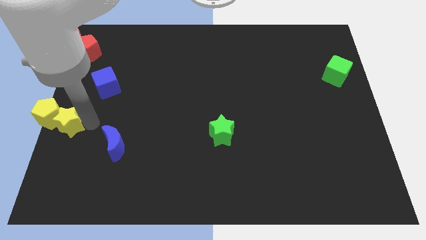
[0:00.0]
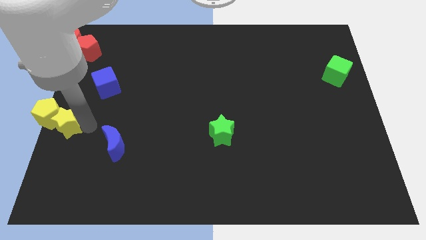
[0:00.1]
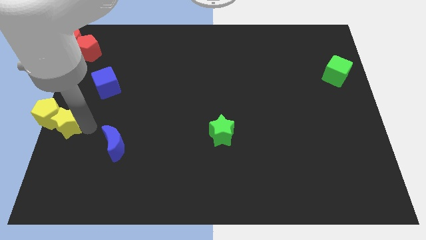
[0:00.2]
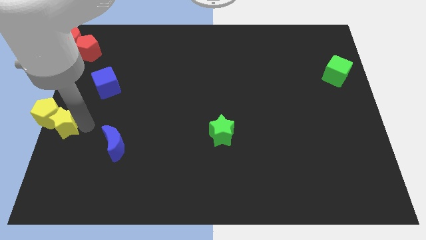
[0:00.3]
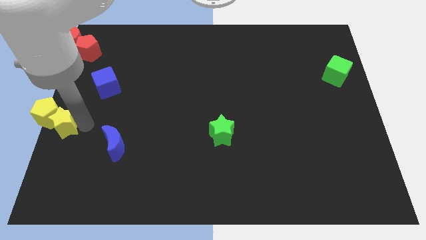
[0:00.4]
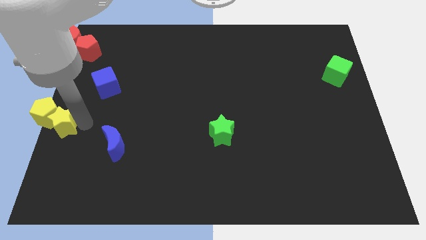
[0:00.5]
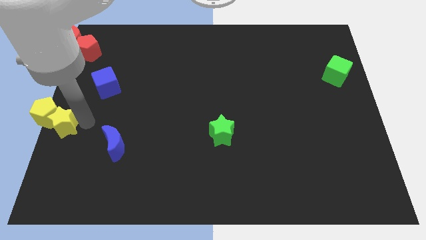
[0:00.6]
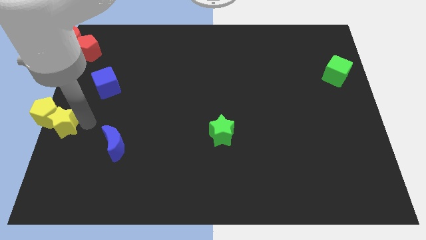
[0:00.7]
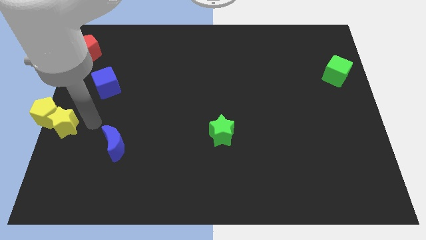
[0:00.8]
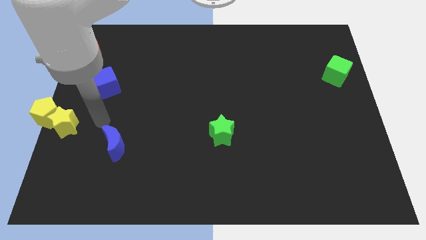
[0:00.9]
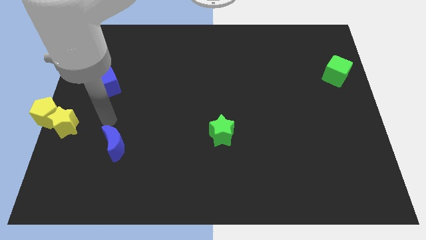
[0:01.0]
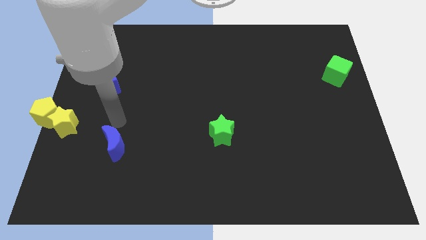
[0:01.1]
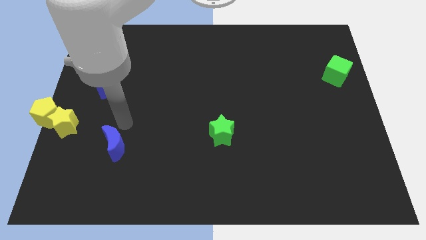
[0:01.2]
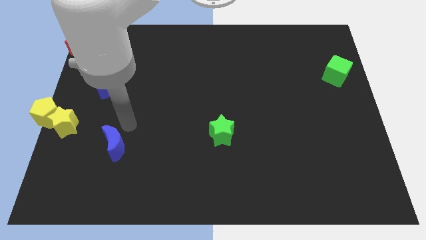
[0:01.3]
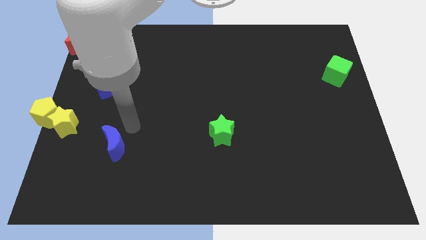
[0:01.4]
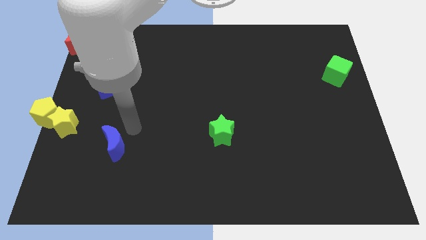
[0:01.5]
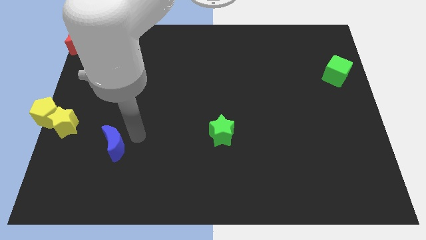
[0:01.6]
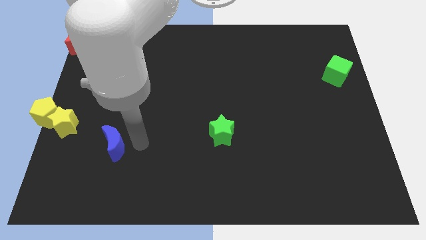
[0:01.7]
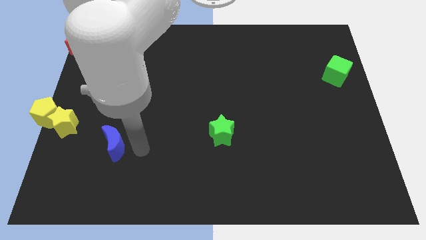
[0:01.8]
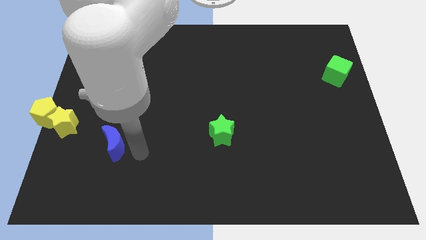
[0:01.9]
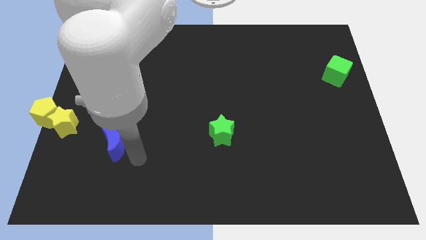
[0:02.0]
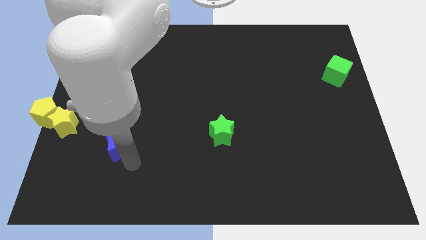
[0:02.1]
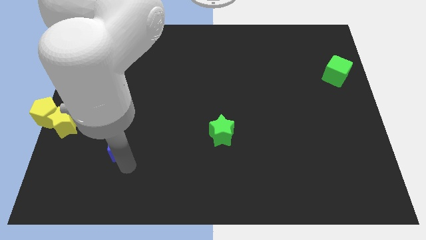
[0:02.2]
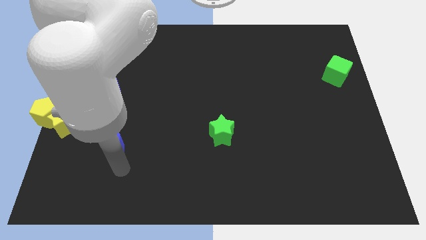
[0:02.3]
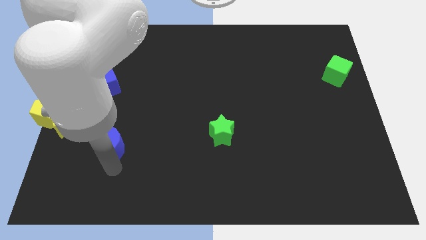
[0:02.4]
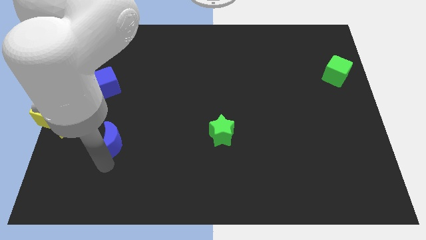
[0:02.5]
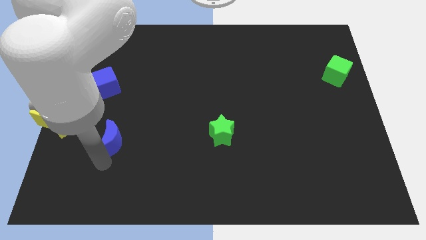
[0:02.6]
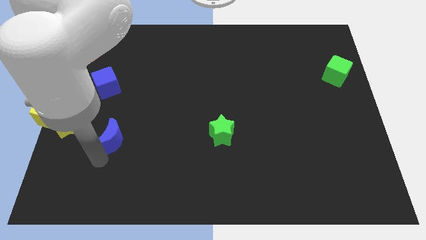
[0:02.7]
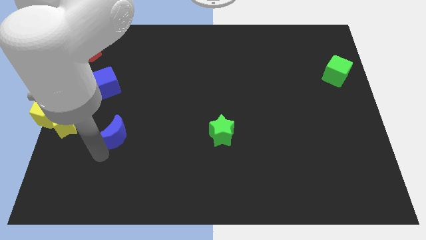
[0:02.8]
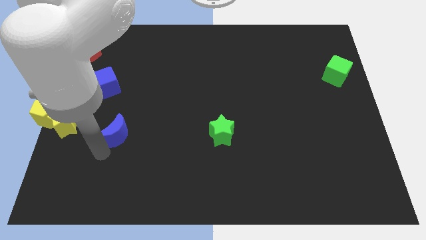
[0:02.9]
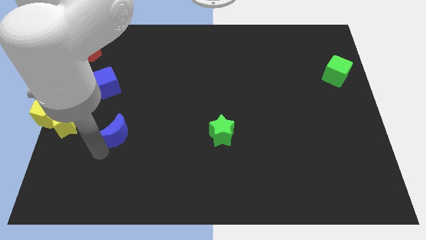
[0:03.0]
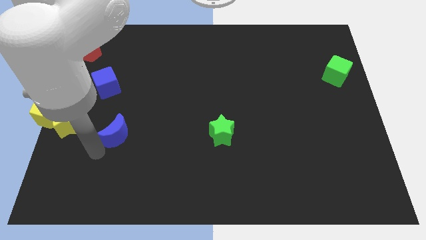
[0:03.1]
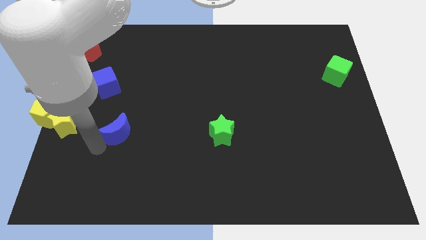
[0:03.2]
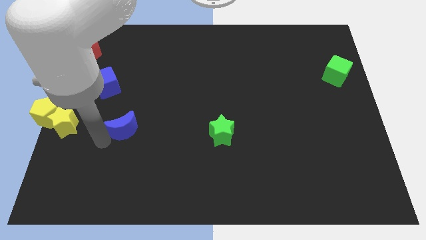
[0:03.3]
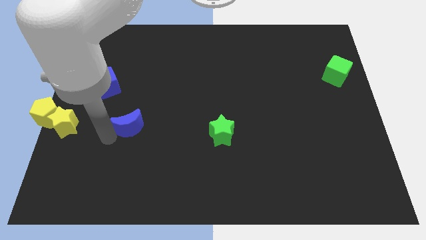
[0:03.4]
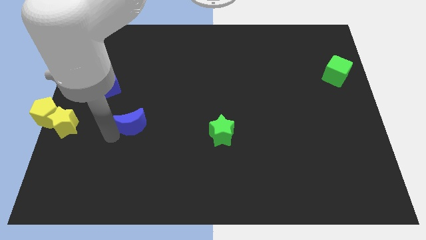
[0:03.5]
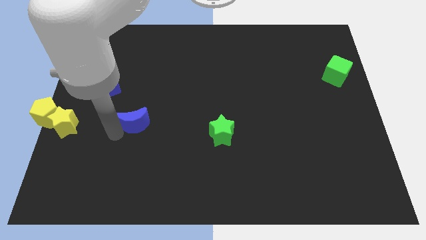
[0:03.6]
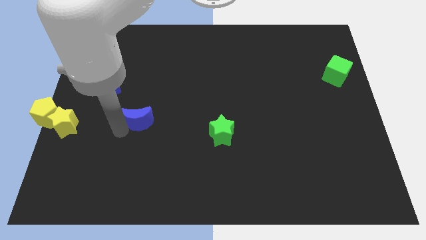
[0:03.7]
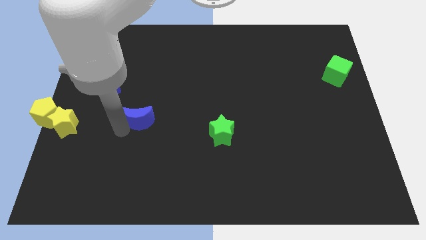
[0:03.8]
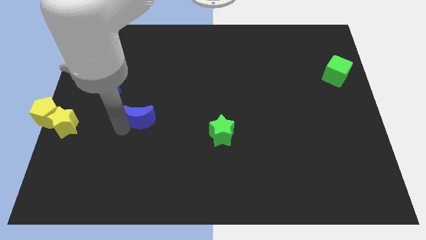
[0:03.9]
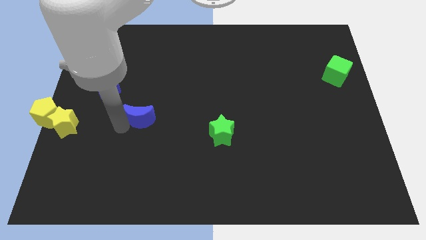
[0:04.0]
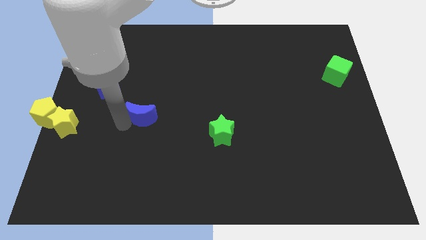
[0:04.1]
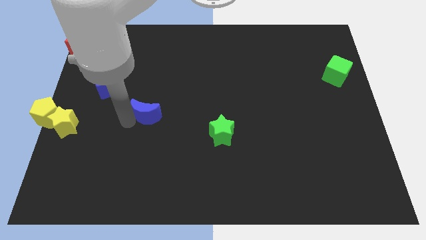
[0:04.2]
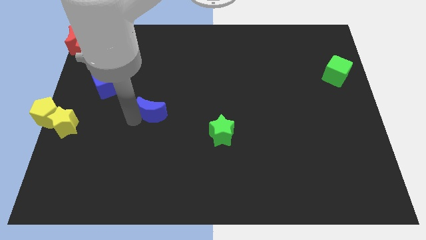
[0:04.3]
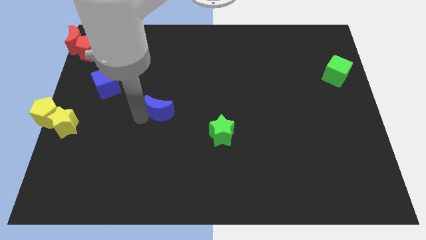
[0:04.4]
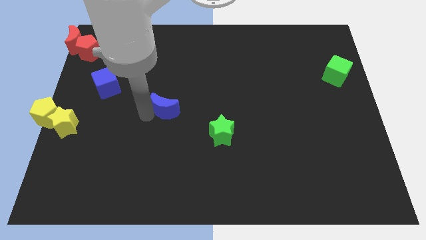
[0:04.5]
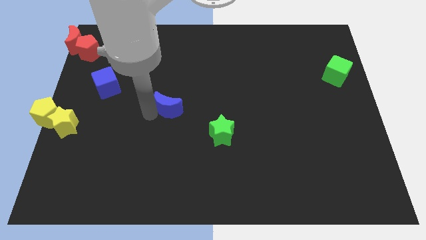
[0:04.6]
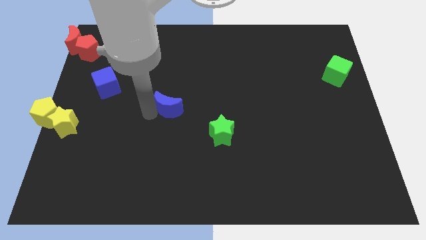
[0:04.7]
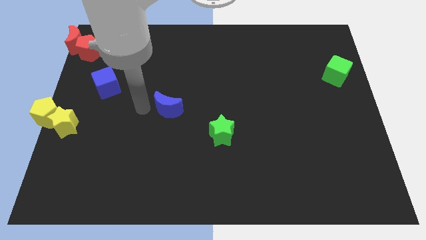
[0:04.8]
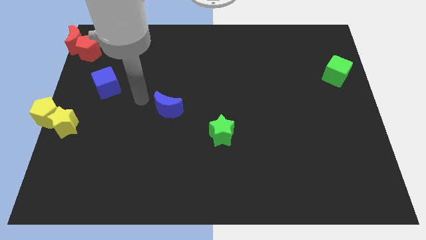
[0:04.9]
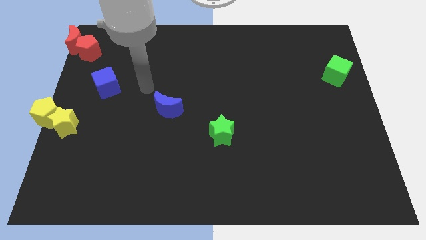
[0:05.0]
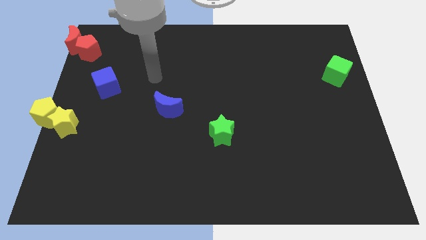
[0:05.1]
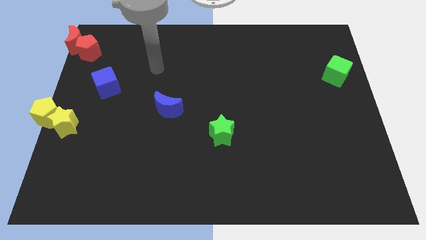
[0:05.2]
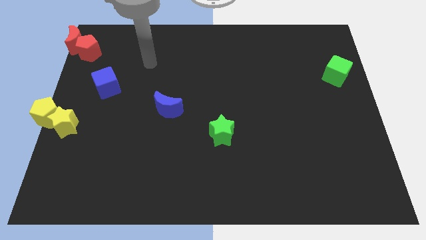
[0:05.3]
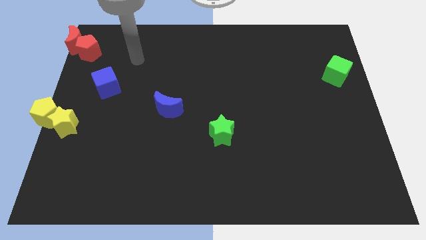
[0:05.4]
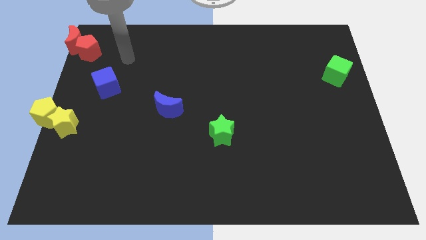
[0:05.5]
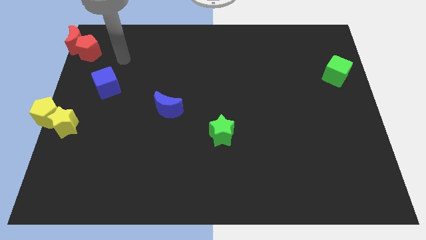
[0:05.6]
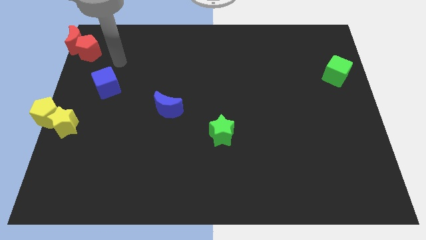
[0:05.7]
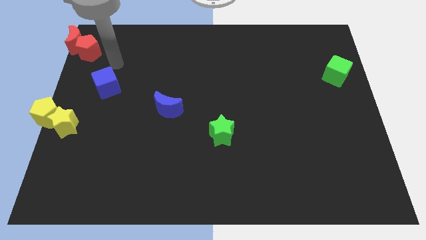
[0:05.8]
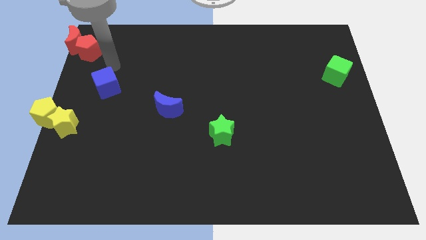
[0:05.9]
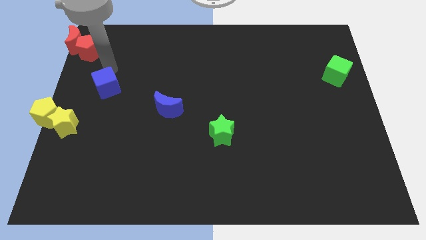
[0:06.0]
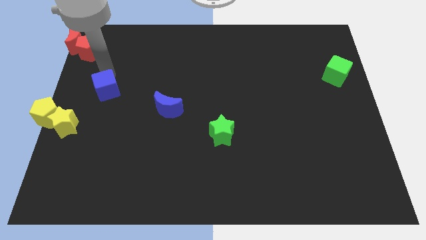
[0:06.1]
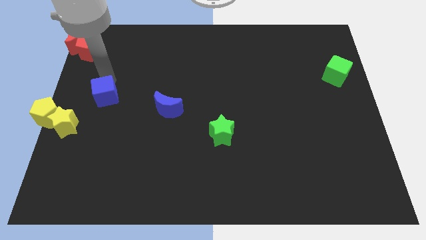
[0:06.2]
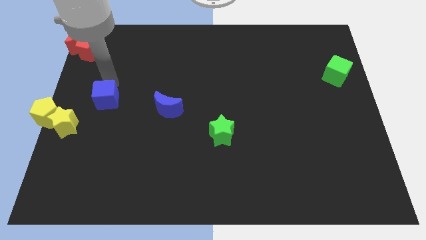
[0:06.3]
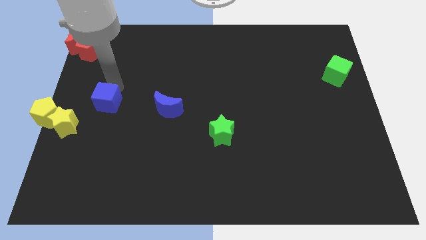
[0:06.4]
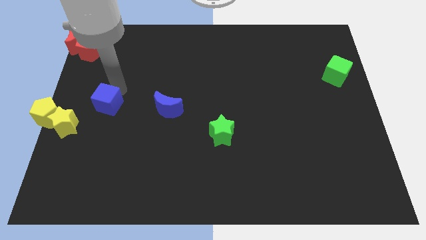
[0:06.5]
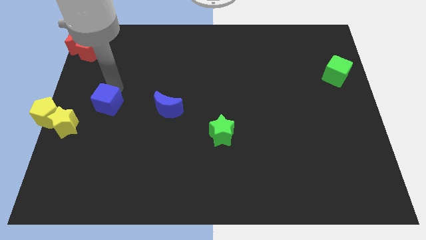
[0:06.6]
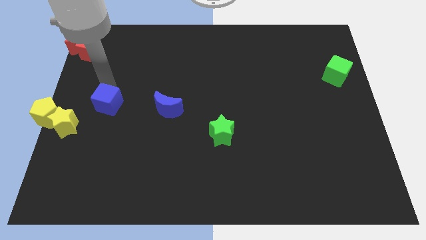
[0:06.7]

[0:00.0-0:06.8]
place the blue moon at the center of the board

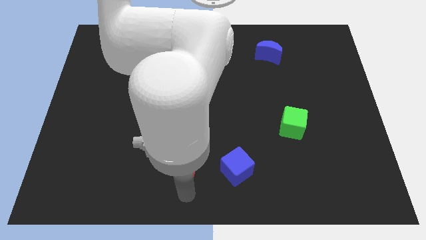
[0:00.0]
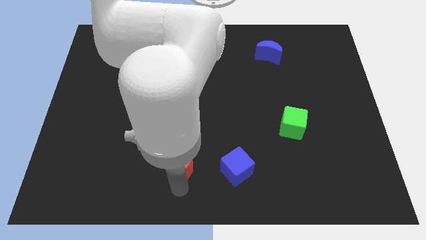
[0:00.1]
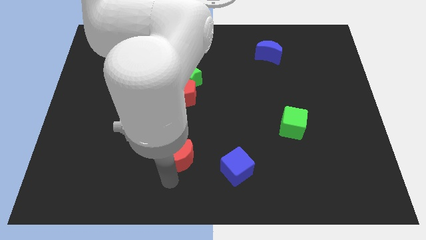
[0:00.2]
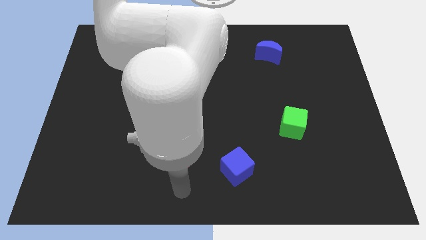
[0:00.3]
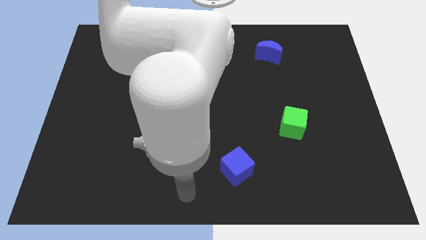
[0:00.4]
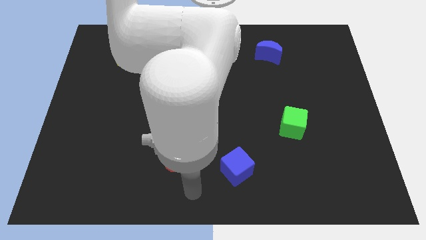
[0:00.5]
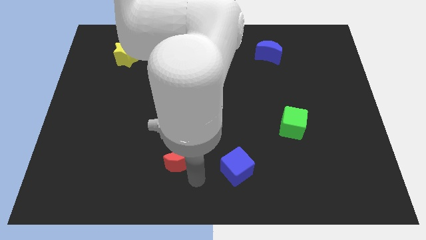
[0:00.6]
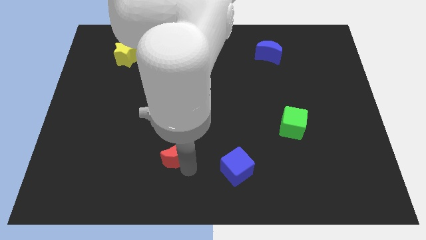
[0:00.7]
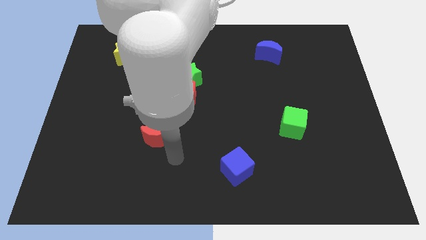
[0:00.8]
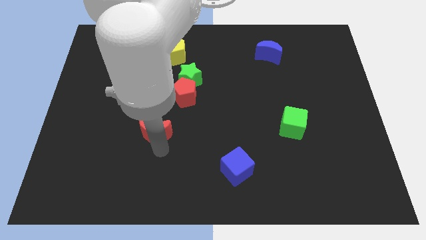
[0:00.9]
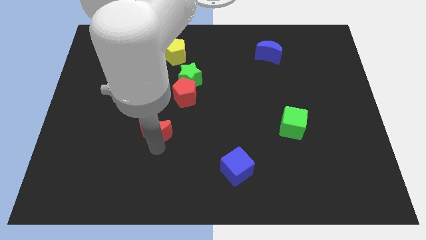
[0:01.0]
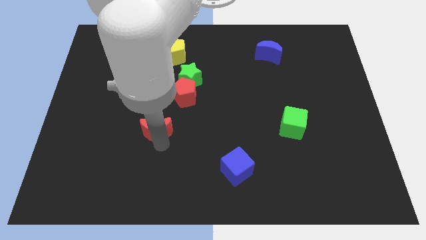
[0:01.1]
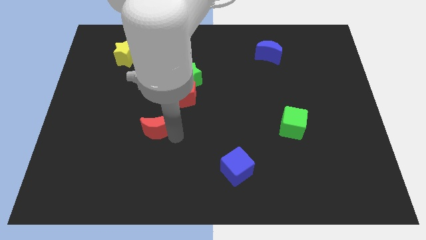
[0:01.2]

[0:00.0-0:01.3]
move the red crescent upwards

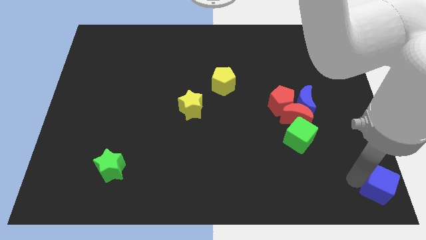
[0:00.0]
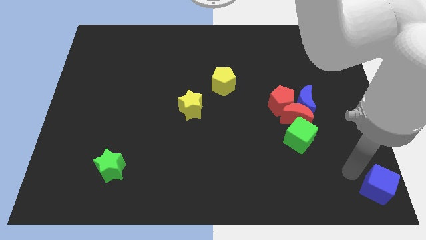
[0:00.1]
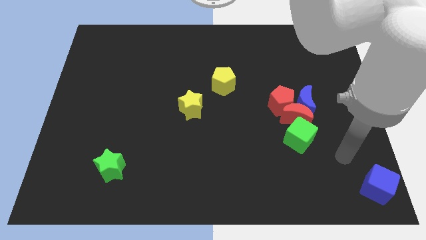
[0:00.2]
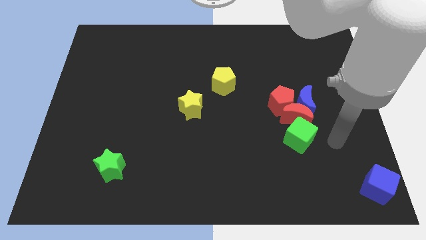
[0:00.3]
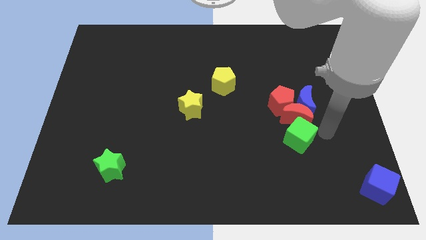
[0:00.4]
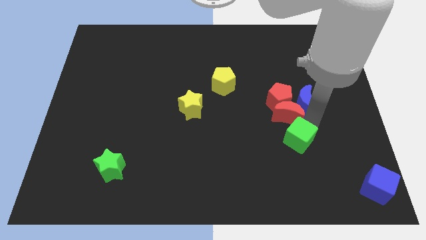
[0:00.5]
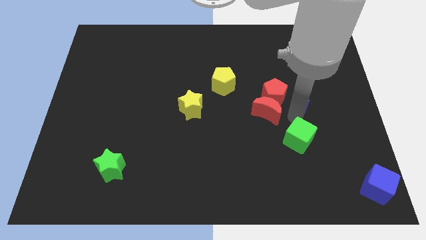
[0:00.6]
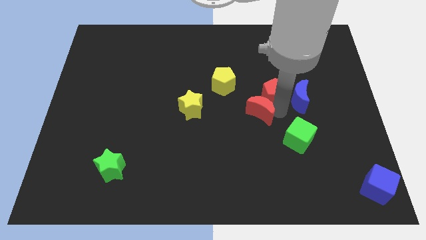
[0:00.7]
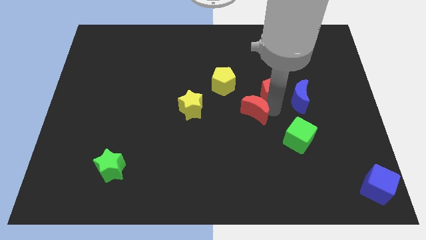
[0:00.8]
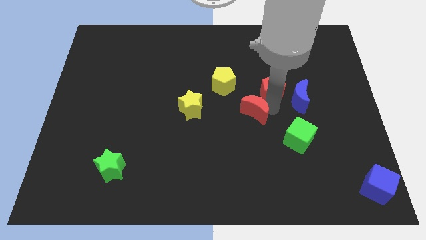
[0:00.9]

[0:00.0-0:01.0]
separate the red blocks from blue moon and green cube
